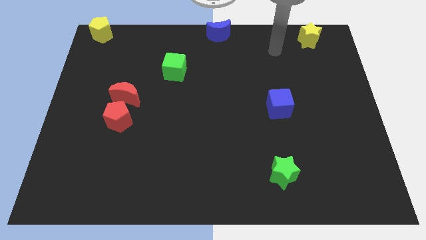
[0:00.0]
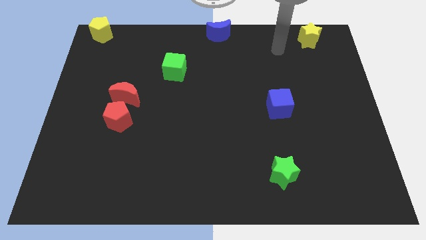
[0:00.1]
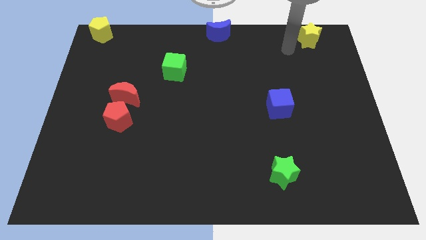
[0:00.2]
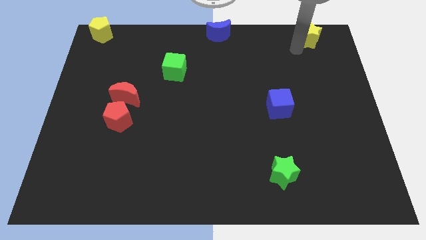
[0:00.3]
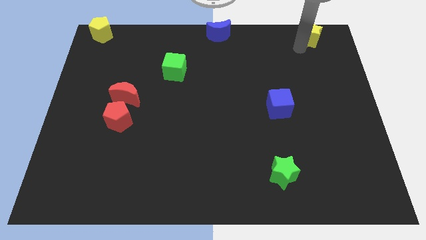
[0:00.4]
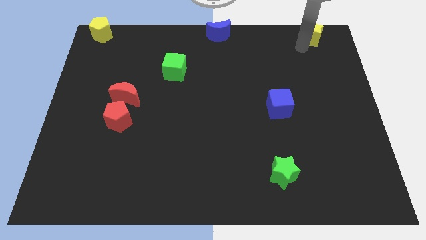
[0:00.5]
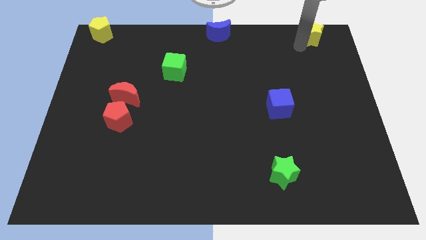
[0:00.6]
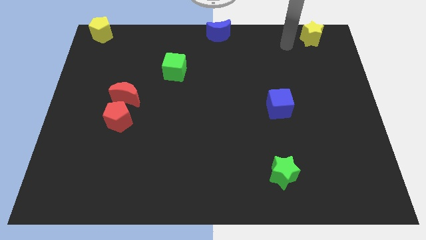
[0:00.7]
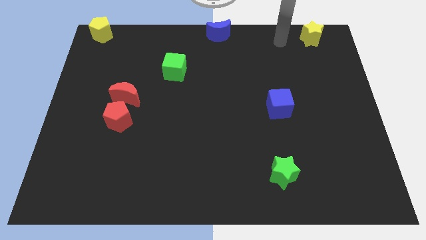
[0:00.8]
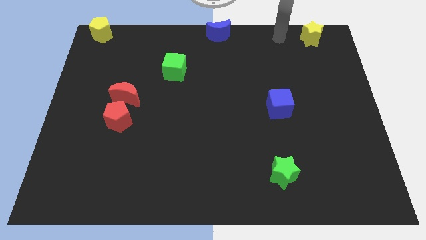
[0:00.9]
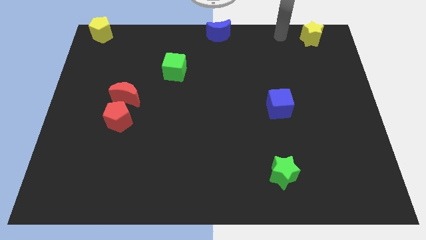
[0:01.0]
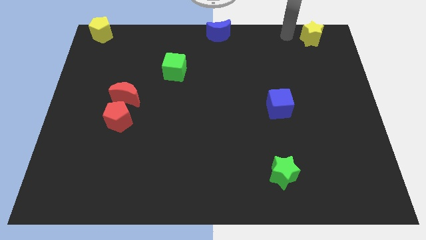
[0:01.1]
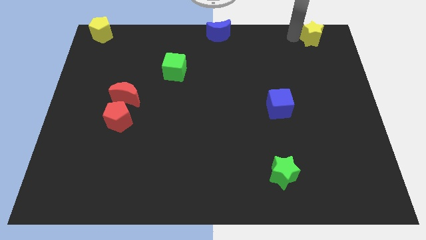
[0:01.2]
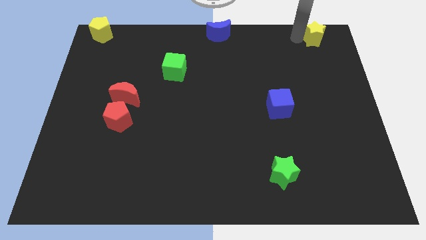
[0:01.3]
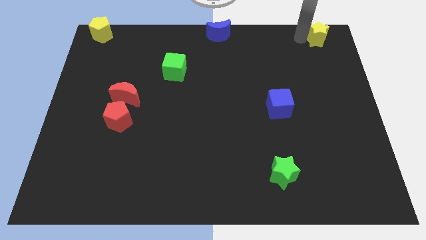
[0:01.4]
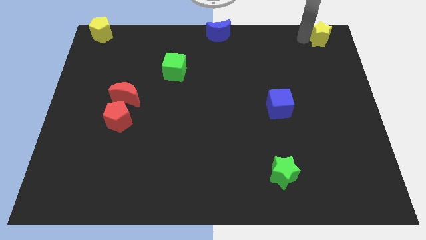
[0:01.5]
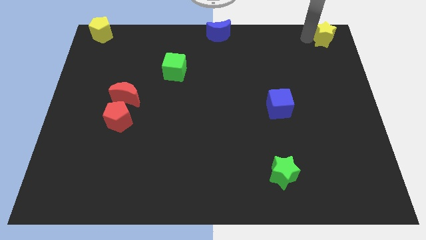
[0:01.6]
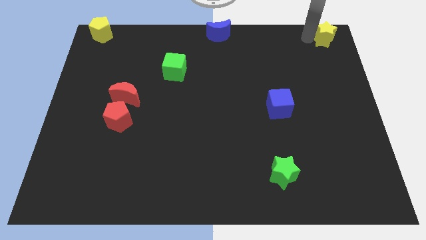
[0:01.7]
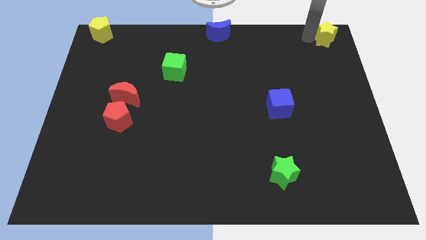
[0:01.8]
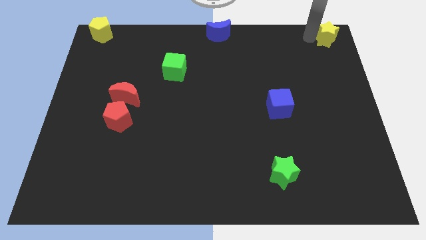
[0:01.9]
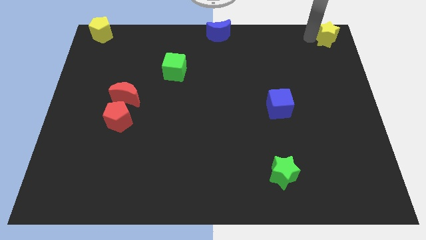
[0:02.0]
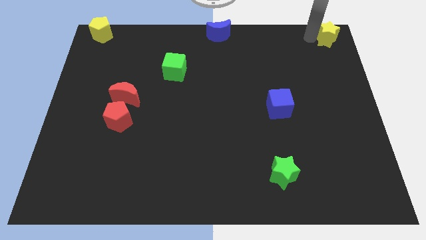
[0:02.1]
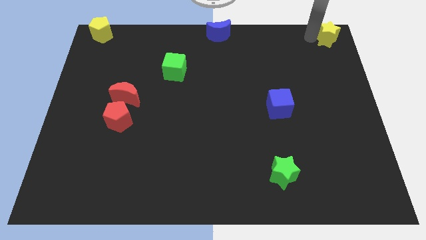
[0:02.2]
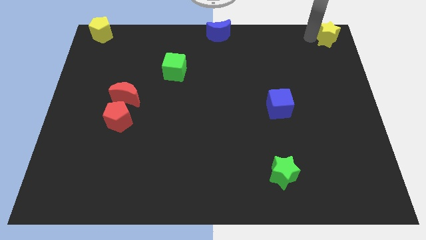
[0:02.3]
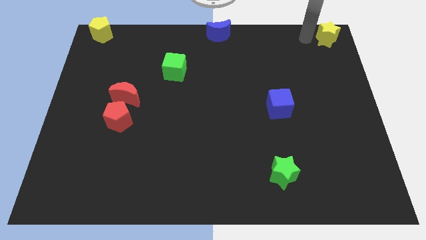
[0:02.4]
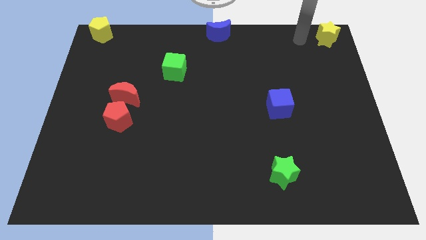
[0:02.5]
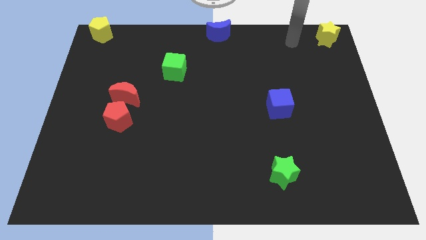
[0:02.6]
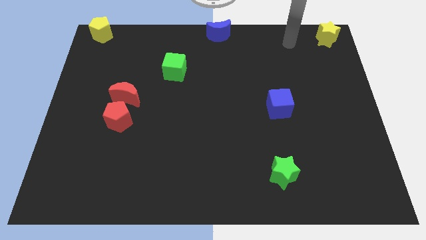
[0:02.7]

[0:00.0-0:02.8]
move the yellow star to the top right corner of the board

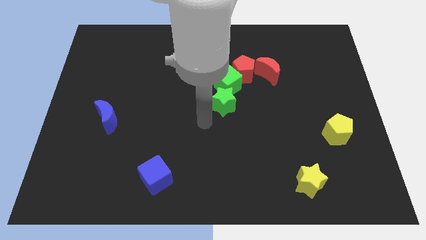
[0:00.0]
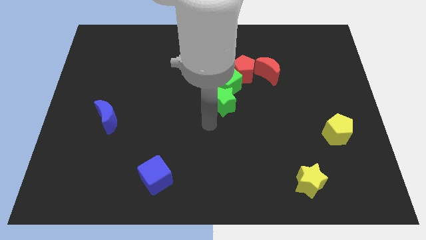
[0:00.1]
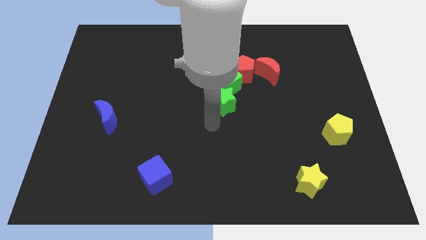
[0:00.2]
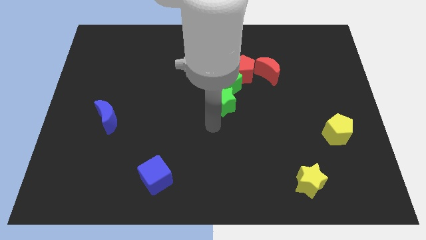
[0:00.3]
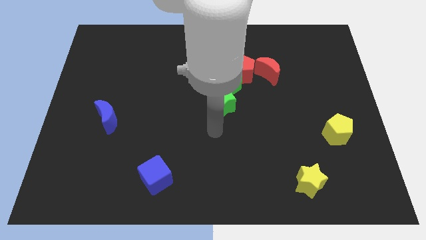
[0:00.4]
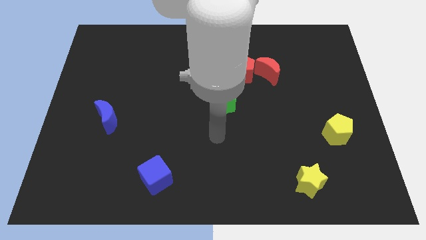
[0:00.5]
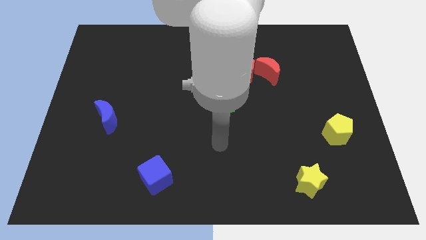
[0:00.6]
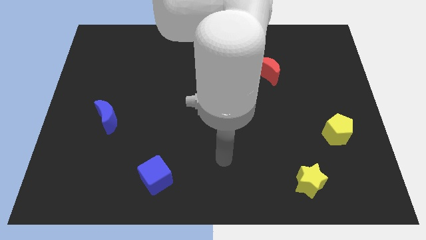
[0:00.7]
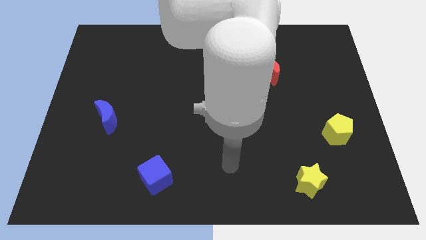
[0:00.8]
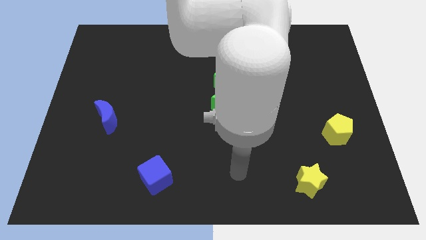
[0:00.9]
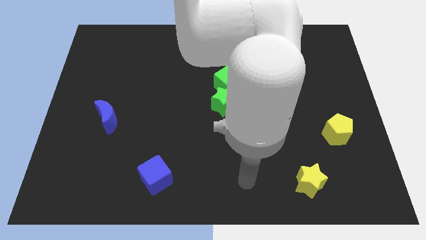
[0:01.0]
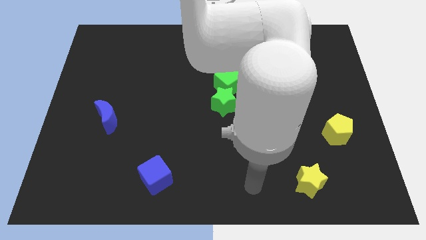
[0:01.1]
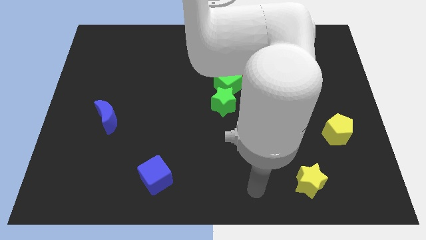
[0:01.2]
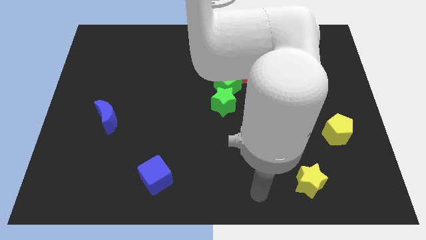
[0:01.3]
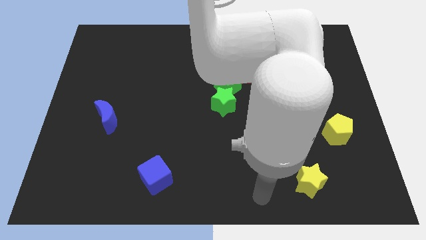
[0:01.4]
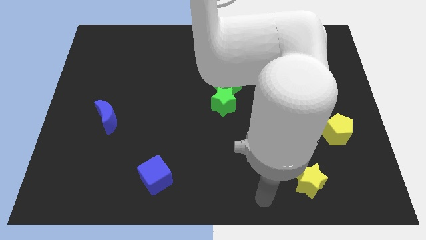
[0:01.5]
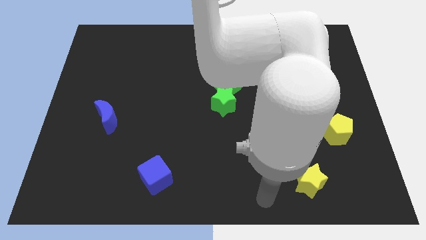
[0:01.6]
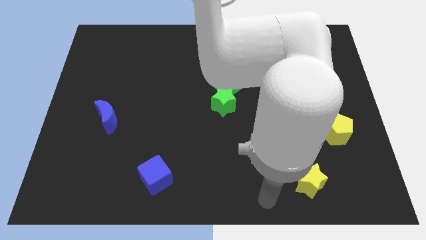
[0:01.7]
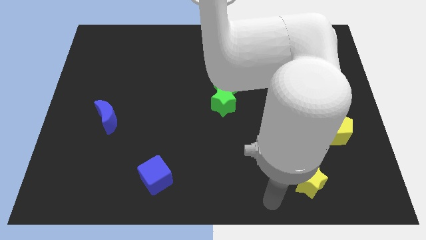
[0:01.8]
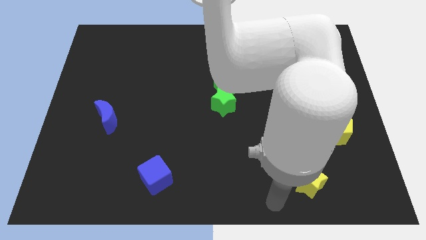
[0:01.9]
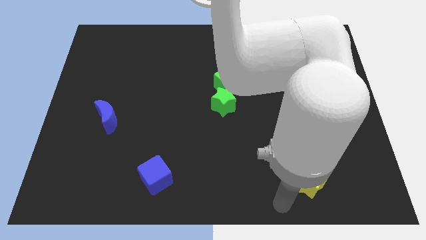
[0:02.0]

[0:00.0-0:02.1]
move away from the green star

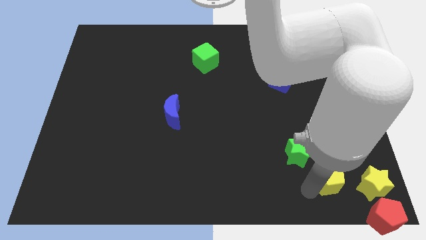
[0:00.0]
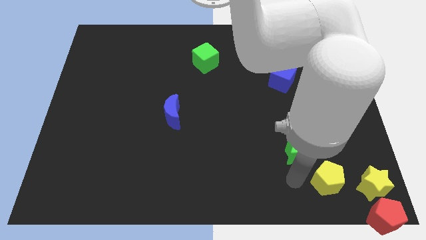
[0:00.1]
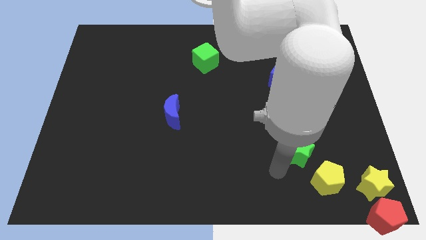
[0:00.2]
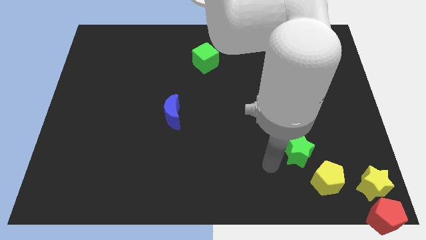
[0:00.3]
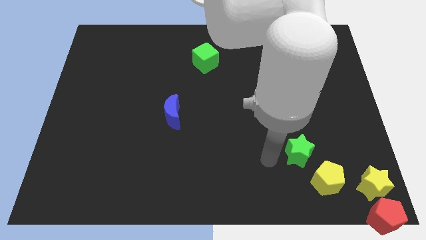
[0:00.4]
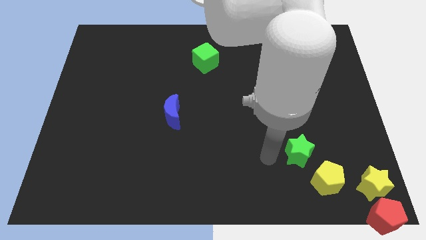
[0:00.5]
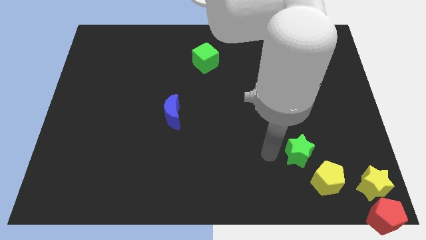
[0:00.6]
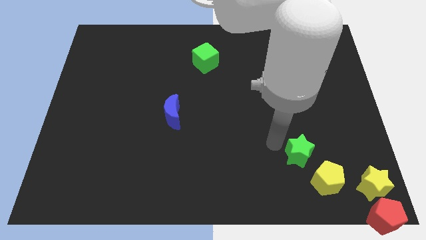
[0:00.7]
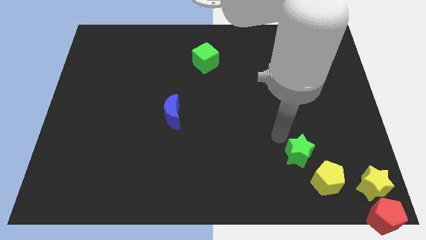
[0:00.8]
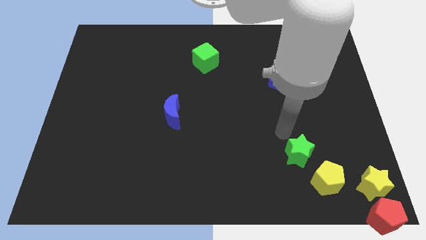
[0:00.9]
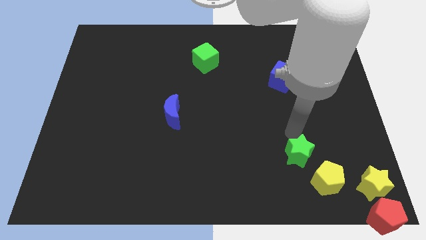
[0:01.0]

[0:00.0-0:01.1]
point your arm at the top of green star

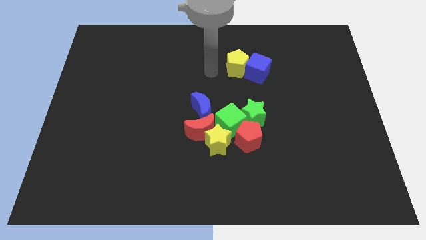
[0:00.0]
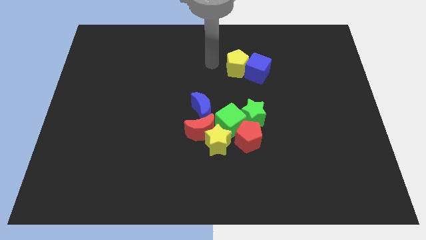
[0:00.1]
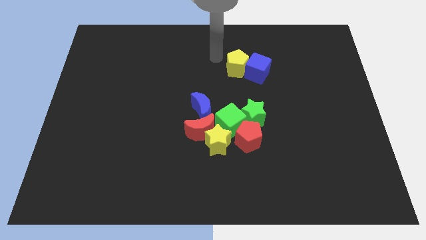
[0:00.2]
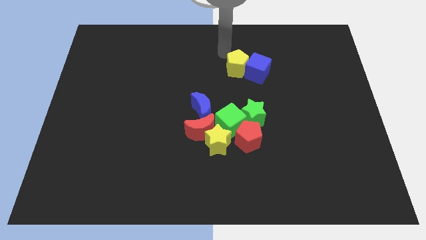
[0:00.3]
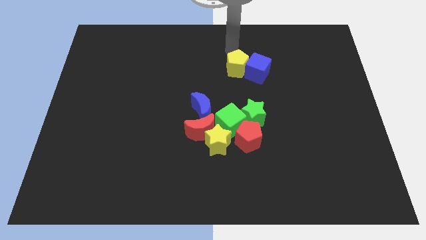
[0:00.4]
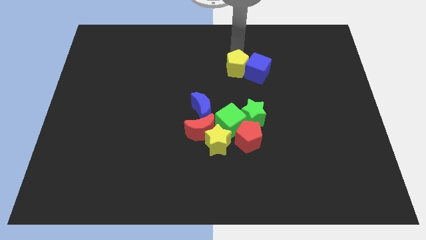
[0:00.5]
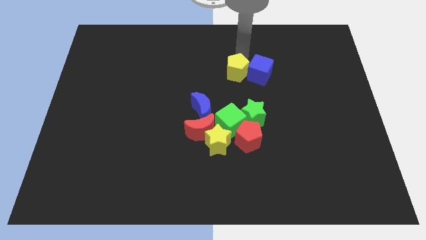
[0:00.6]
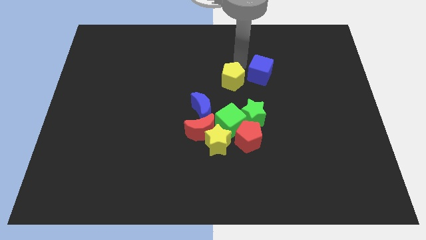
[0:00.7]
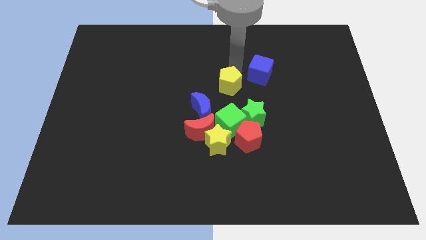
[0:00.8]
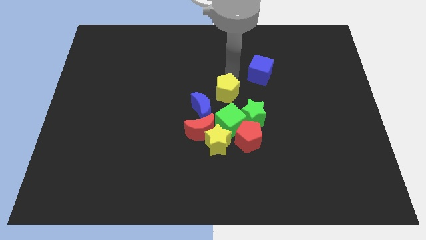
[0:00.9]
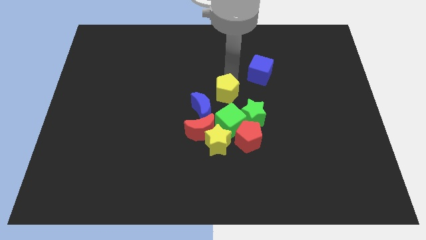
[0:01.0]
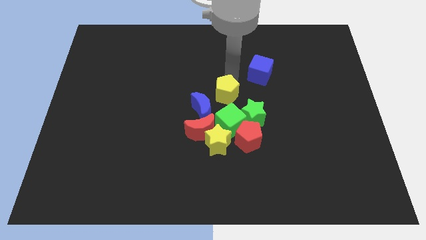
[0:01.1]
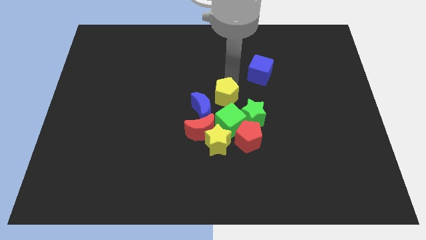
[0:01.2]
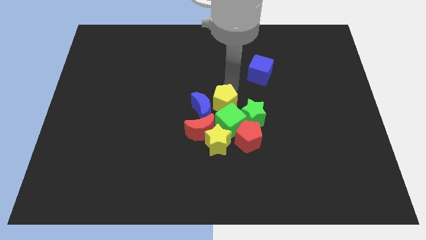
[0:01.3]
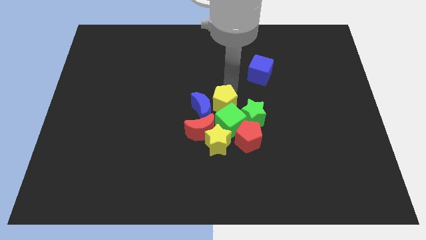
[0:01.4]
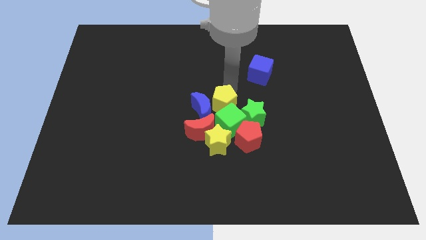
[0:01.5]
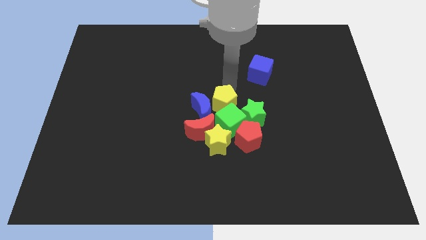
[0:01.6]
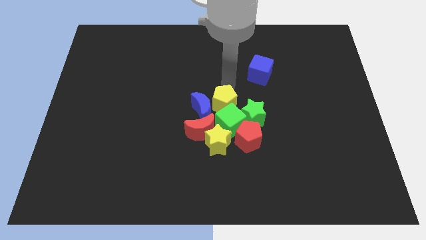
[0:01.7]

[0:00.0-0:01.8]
push the yellow pentagon towards the top of the green cube

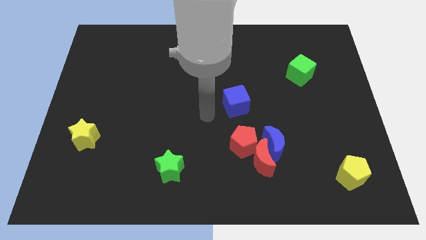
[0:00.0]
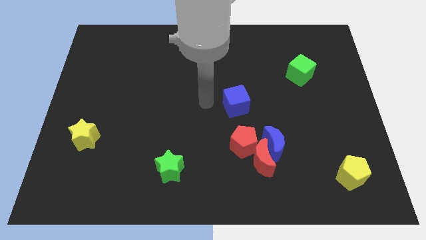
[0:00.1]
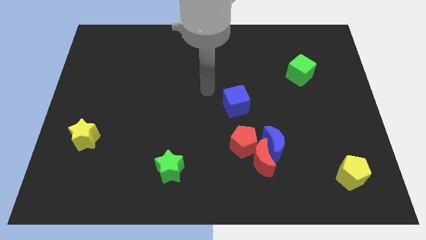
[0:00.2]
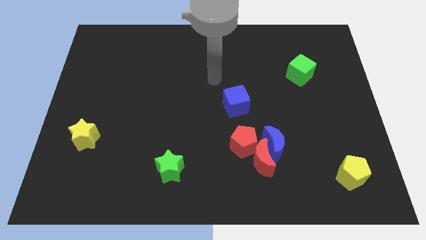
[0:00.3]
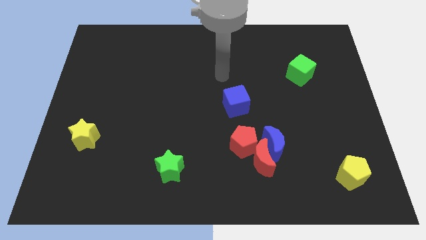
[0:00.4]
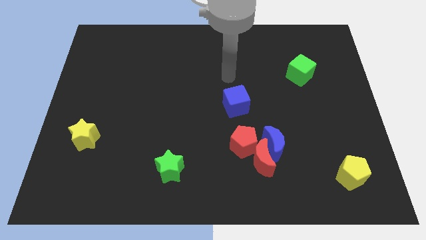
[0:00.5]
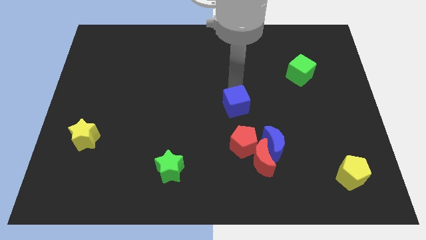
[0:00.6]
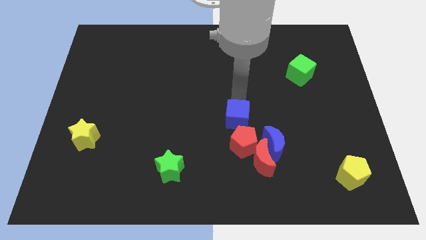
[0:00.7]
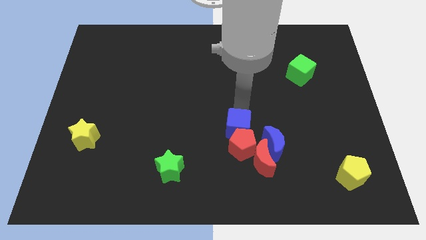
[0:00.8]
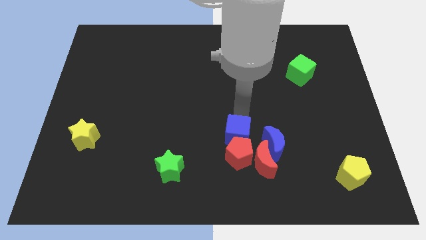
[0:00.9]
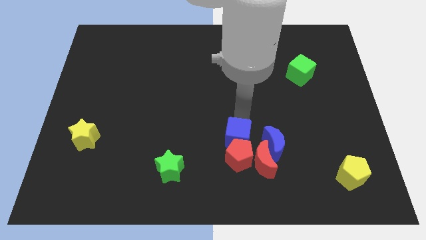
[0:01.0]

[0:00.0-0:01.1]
move blue cube into red pentagon
